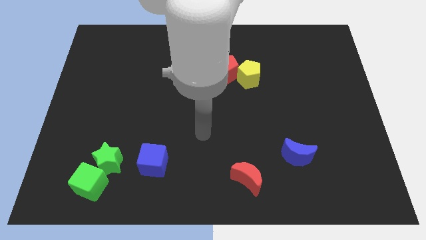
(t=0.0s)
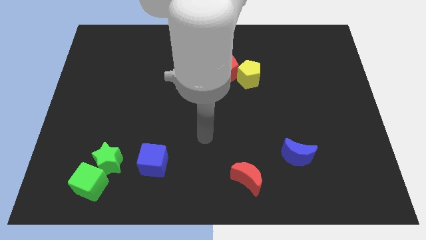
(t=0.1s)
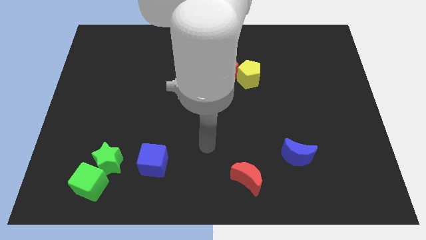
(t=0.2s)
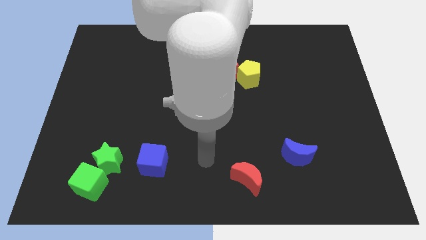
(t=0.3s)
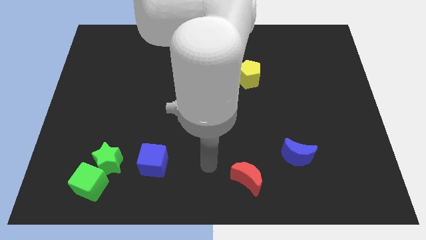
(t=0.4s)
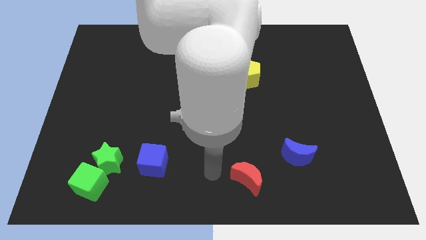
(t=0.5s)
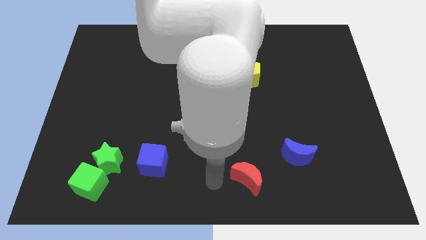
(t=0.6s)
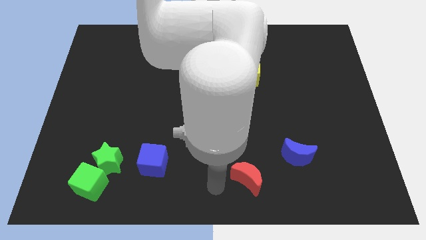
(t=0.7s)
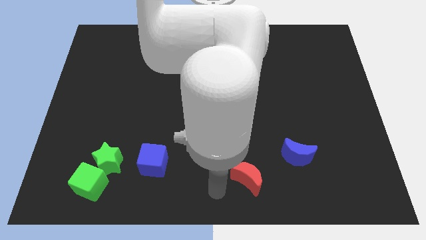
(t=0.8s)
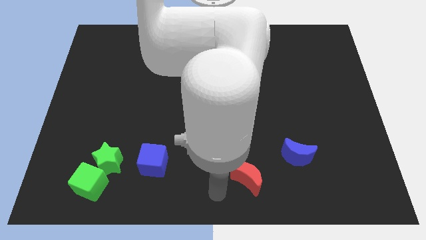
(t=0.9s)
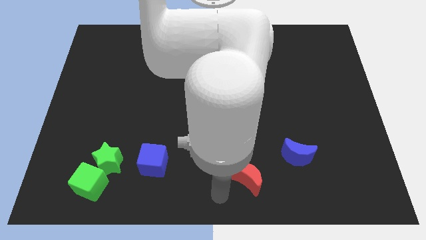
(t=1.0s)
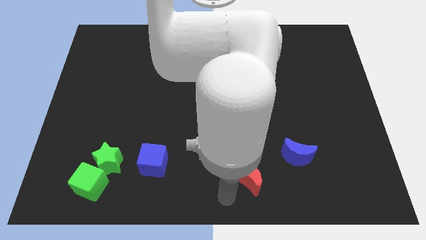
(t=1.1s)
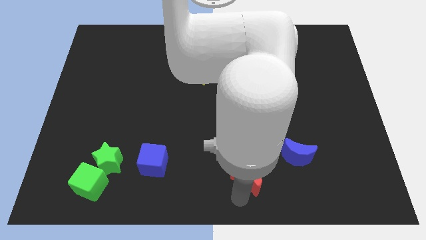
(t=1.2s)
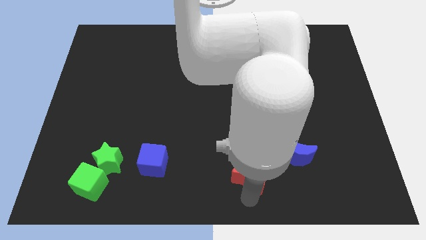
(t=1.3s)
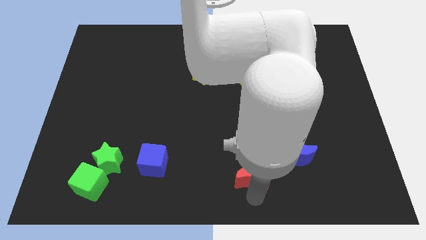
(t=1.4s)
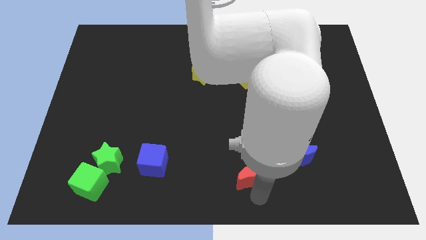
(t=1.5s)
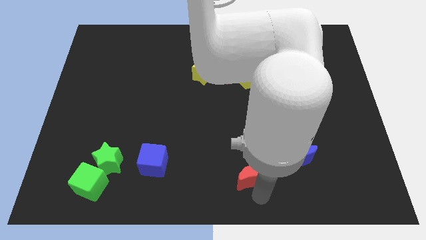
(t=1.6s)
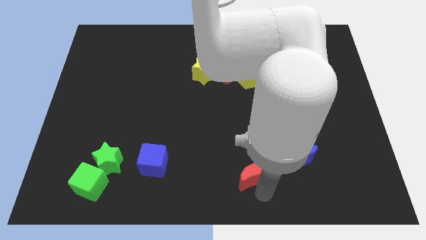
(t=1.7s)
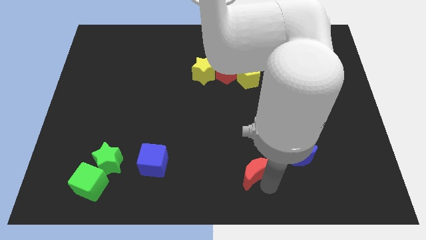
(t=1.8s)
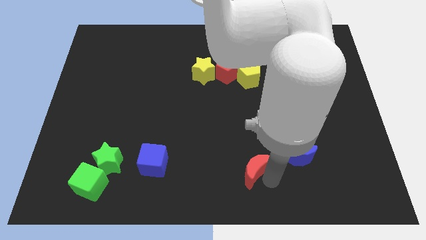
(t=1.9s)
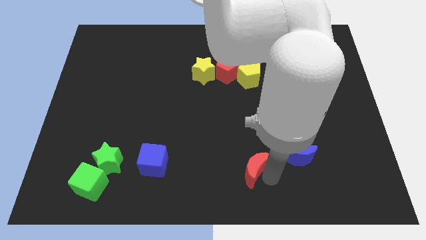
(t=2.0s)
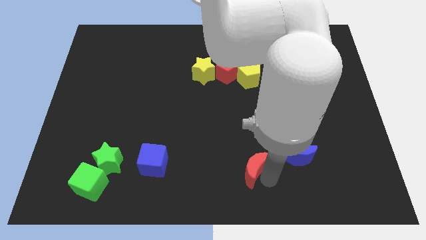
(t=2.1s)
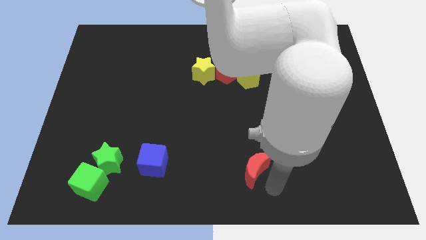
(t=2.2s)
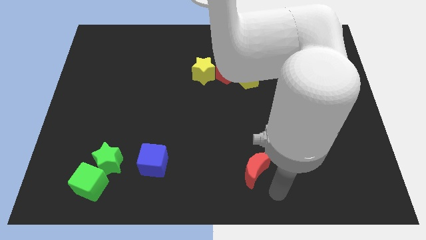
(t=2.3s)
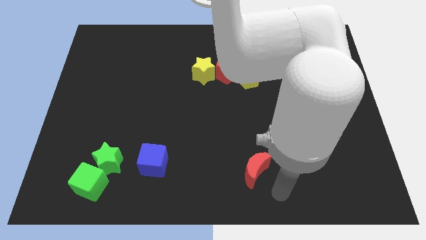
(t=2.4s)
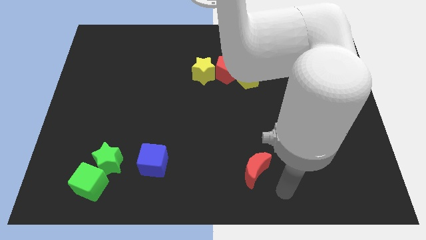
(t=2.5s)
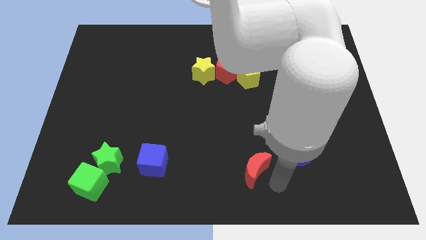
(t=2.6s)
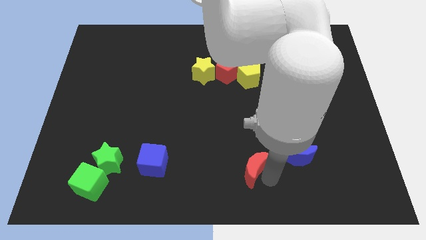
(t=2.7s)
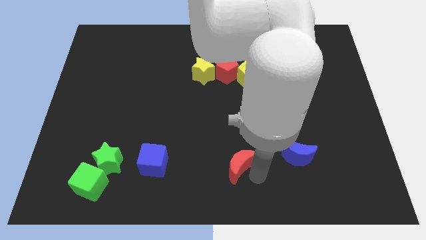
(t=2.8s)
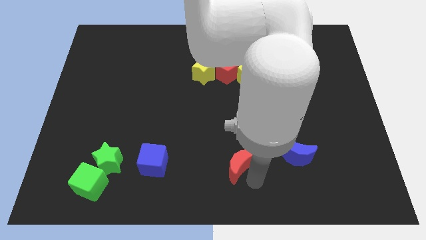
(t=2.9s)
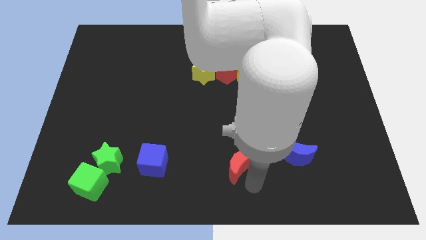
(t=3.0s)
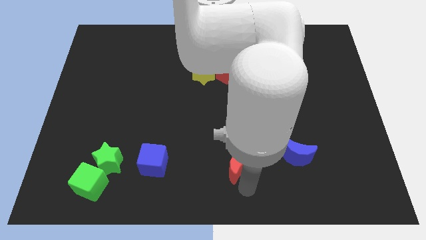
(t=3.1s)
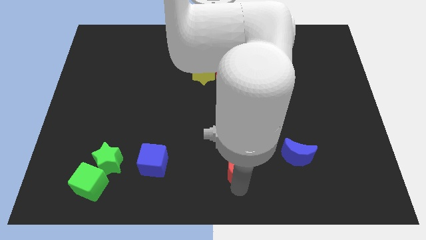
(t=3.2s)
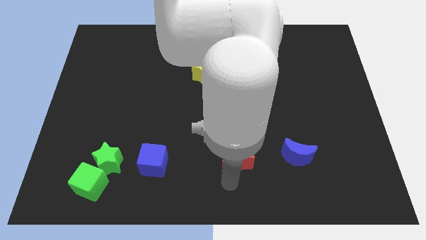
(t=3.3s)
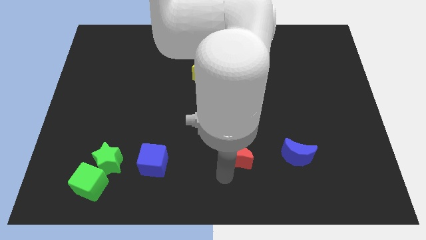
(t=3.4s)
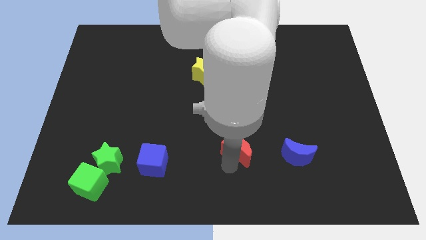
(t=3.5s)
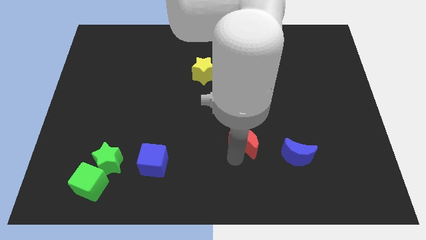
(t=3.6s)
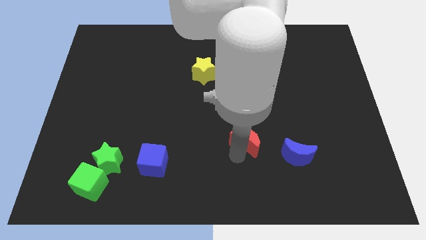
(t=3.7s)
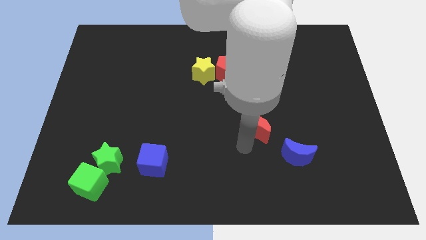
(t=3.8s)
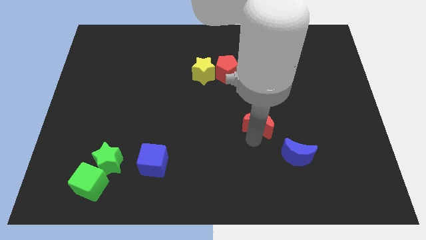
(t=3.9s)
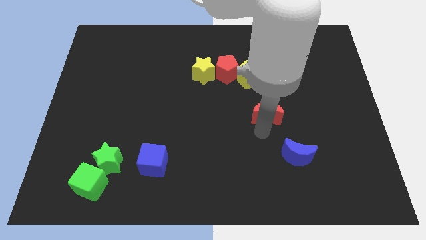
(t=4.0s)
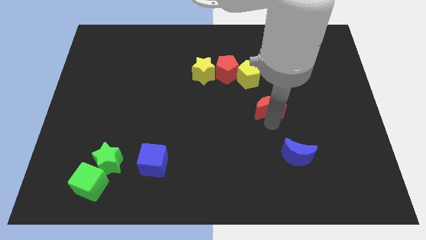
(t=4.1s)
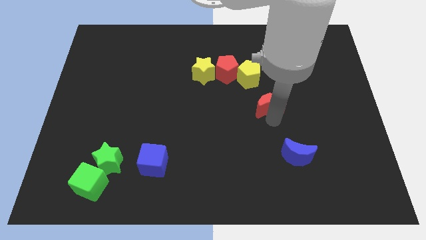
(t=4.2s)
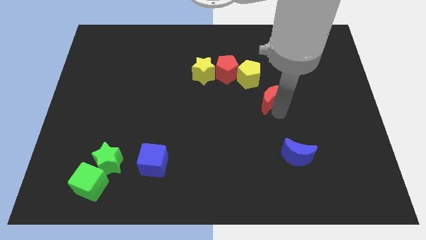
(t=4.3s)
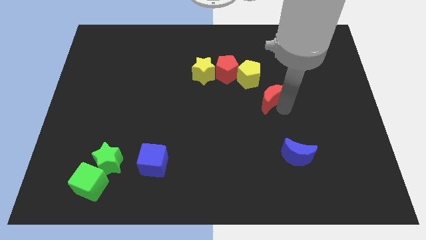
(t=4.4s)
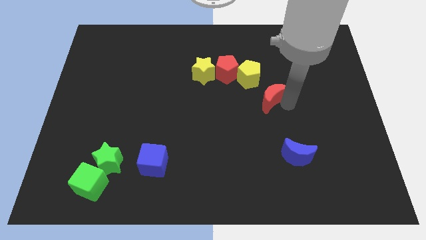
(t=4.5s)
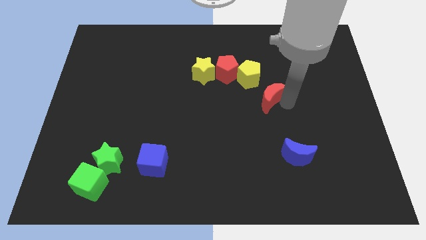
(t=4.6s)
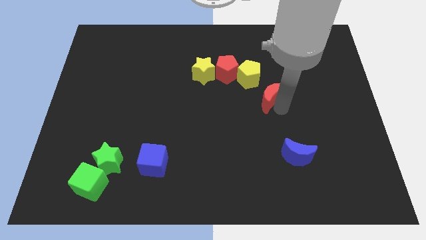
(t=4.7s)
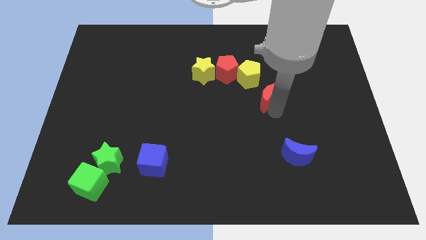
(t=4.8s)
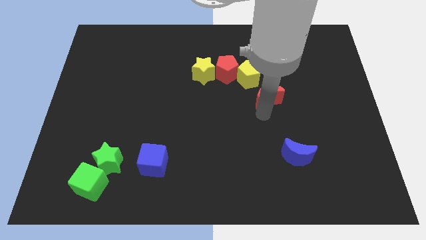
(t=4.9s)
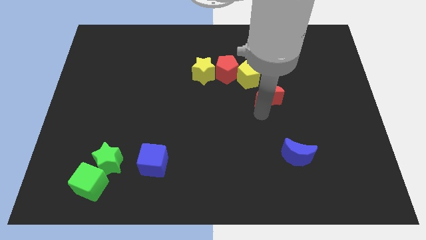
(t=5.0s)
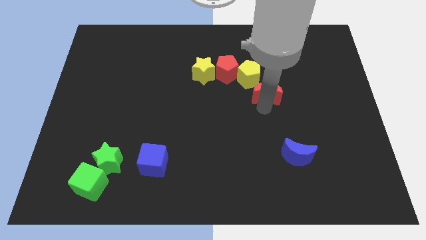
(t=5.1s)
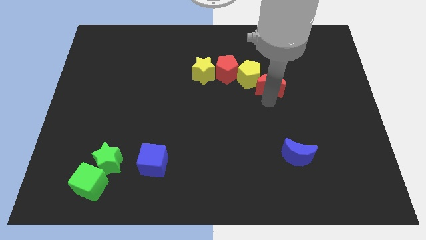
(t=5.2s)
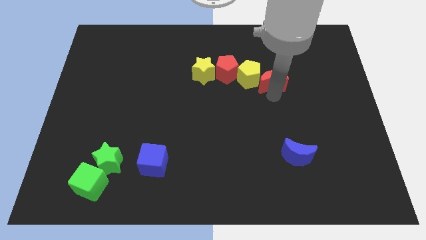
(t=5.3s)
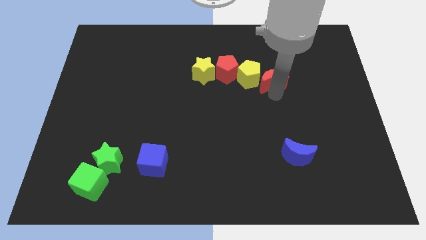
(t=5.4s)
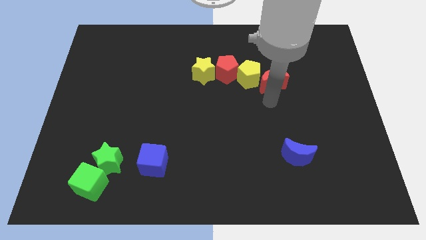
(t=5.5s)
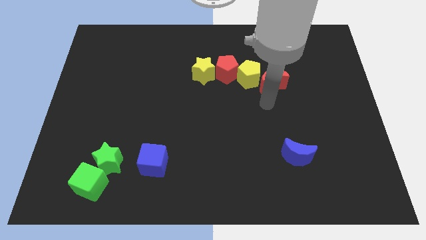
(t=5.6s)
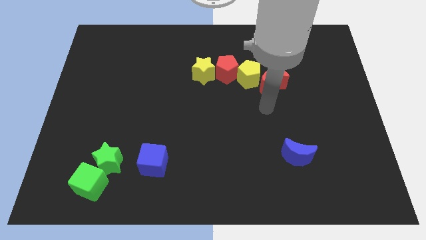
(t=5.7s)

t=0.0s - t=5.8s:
drag the red crescent right beside the yellow pentagon

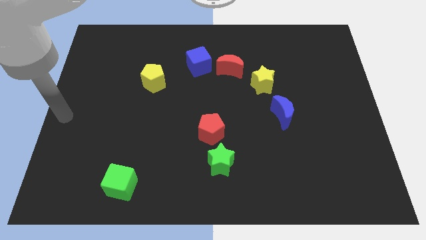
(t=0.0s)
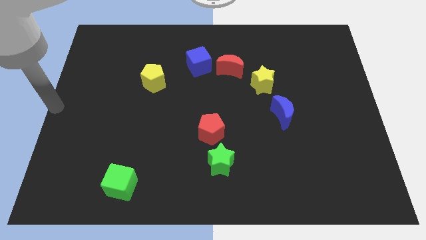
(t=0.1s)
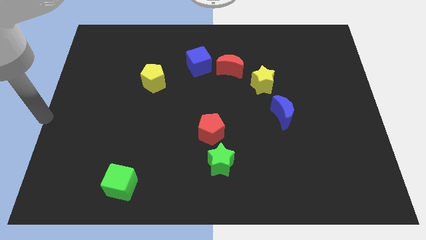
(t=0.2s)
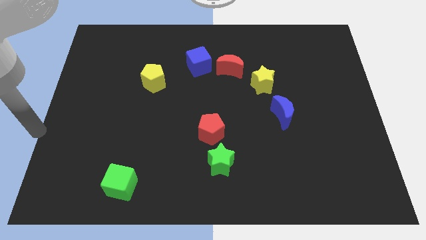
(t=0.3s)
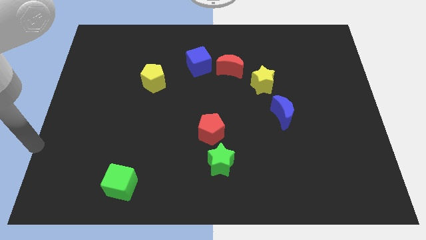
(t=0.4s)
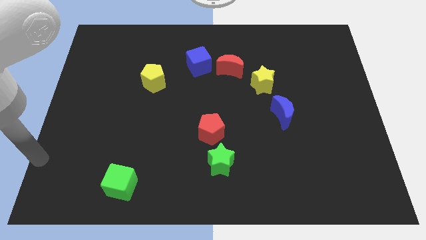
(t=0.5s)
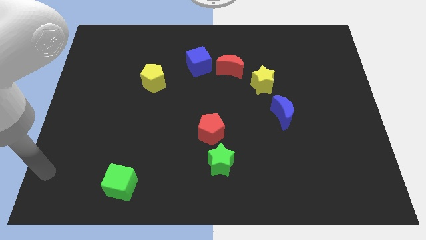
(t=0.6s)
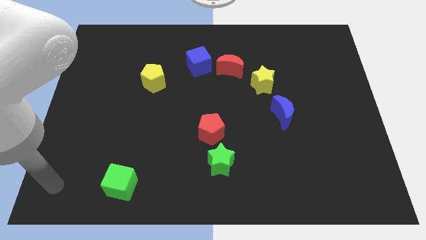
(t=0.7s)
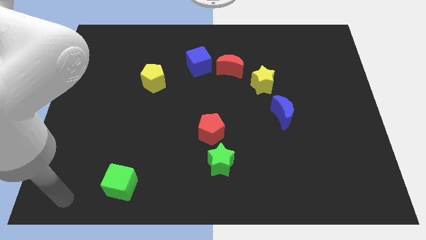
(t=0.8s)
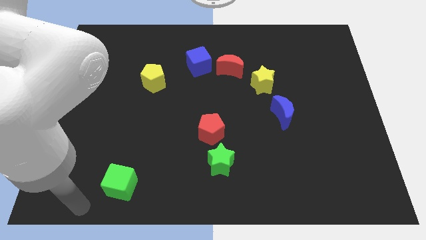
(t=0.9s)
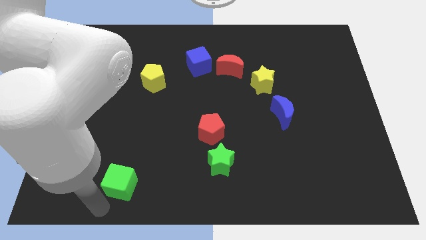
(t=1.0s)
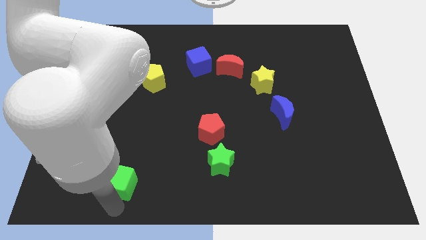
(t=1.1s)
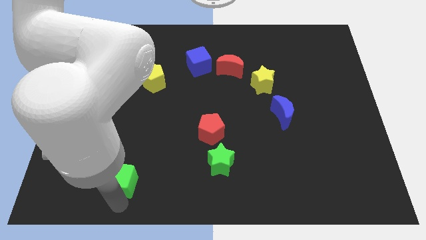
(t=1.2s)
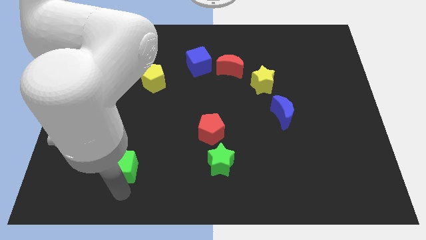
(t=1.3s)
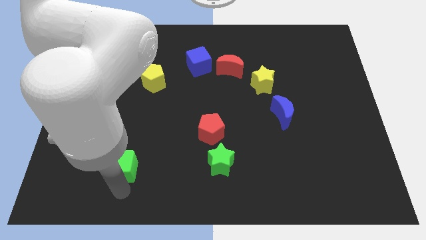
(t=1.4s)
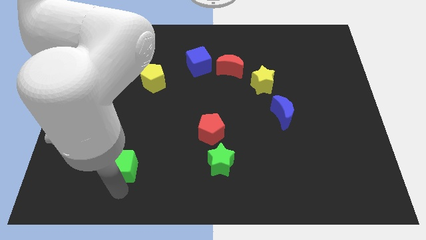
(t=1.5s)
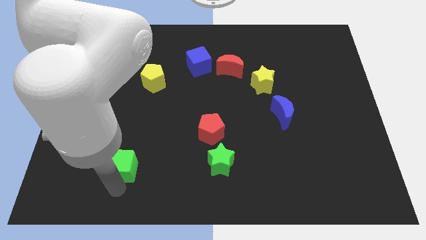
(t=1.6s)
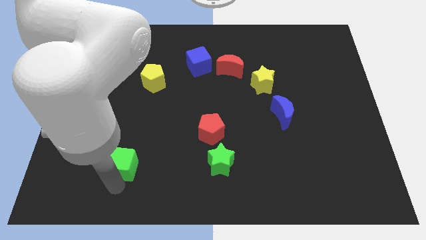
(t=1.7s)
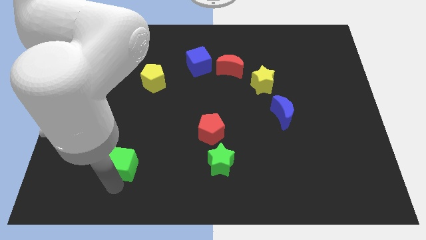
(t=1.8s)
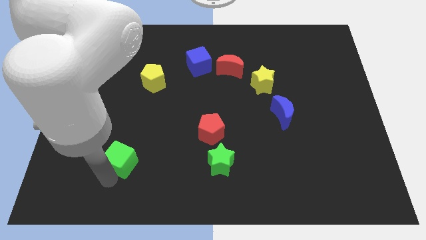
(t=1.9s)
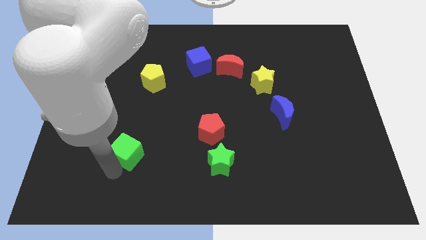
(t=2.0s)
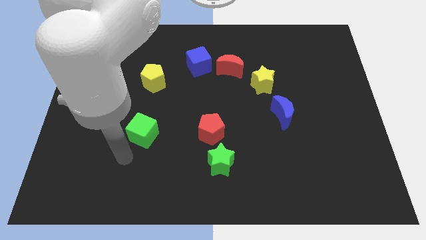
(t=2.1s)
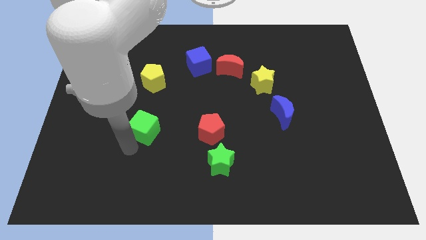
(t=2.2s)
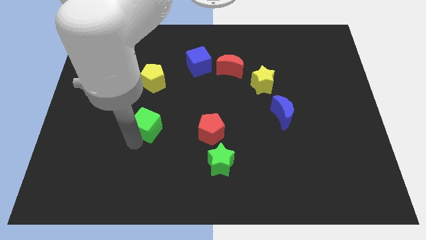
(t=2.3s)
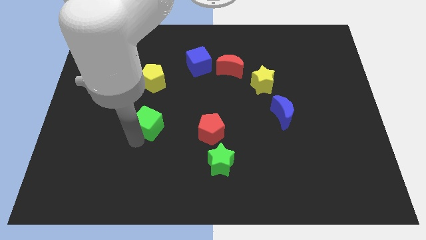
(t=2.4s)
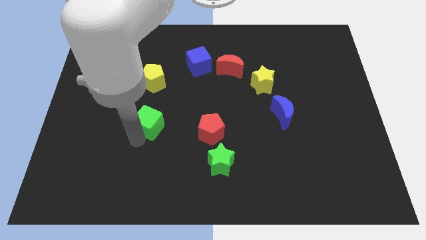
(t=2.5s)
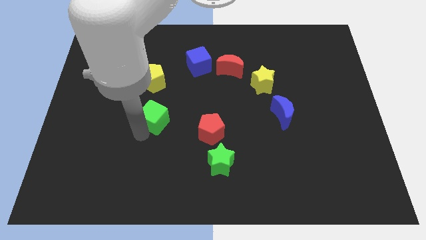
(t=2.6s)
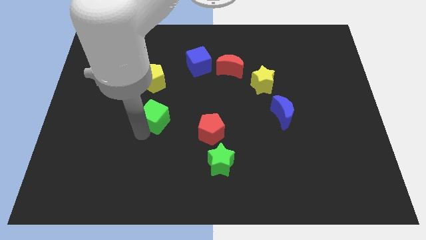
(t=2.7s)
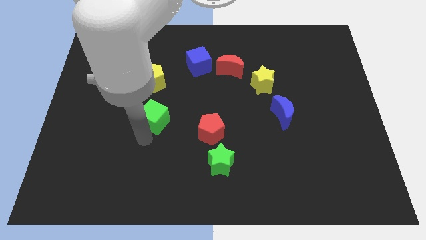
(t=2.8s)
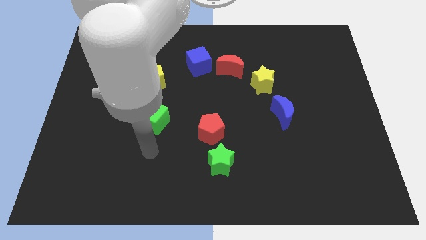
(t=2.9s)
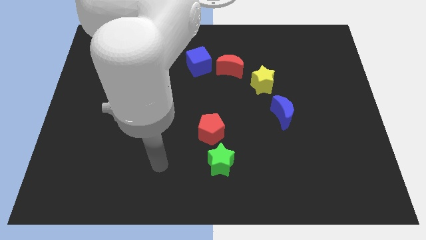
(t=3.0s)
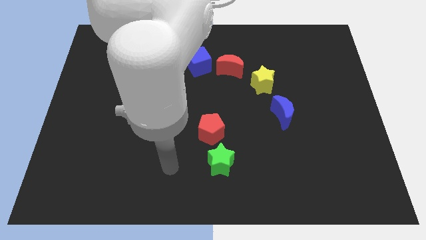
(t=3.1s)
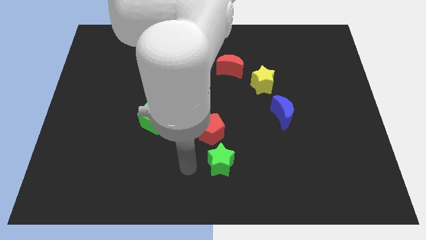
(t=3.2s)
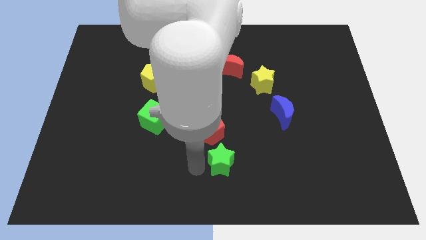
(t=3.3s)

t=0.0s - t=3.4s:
place the green cube vertically below the yellow pentagon
